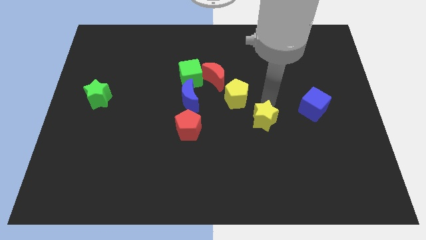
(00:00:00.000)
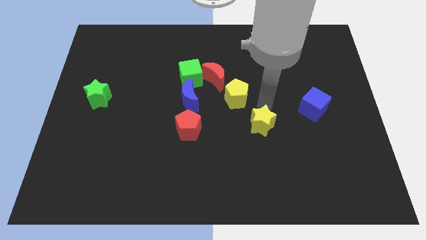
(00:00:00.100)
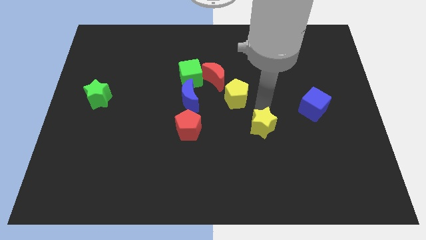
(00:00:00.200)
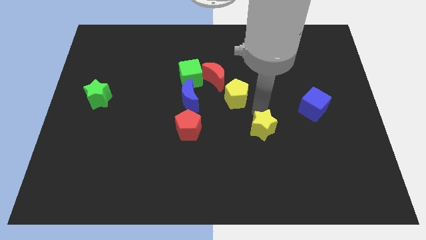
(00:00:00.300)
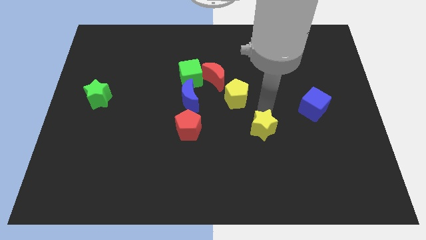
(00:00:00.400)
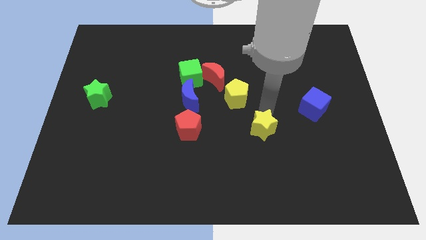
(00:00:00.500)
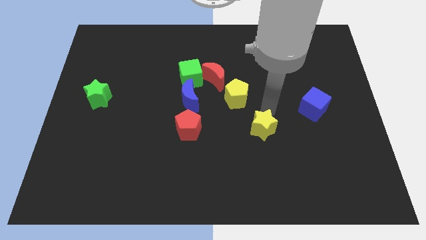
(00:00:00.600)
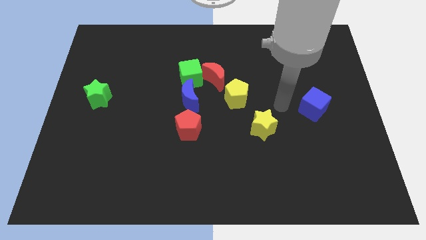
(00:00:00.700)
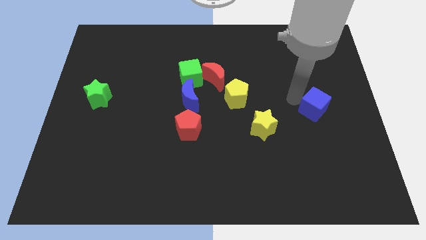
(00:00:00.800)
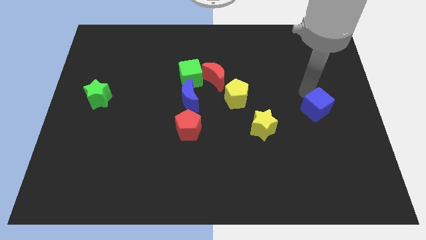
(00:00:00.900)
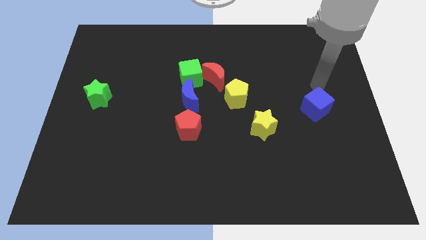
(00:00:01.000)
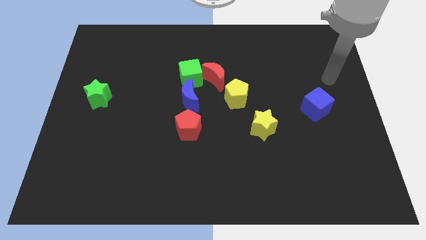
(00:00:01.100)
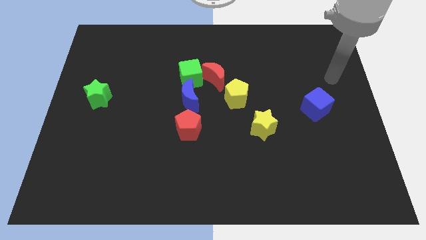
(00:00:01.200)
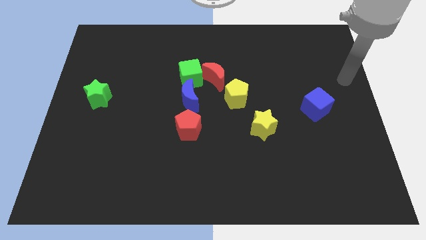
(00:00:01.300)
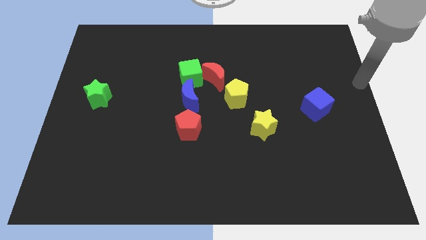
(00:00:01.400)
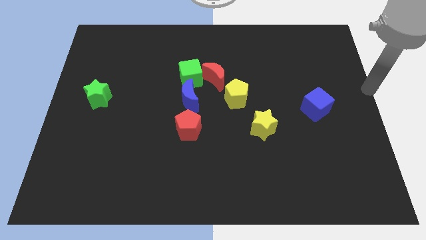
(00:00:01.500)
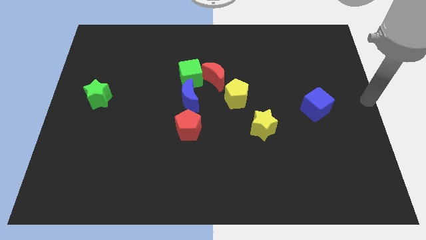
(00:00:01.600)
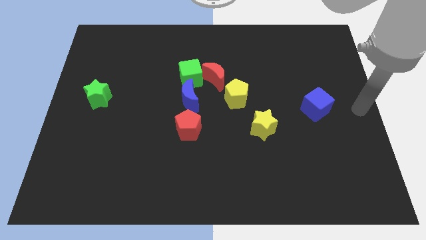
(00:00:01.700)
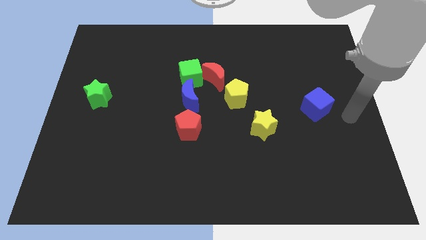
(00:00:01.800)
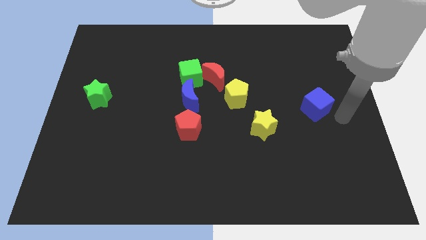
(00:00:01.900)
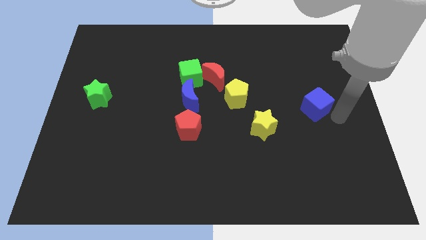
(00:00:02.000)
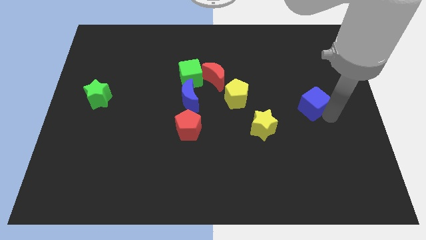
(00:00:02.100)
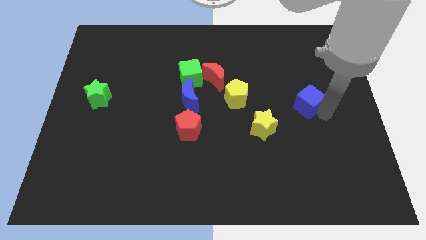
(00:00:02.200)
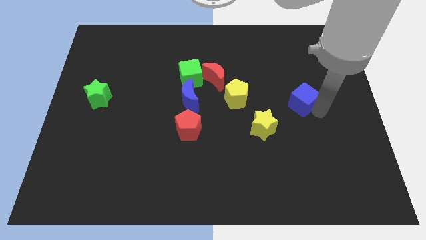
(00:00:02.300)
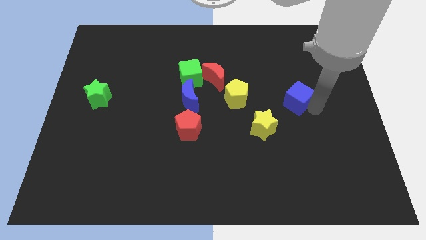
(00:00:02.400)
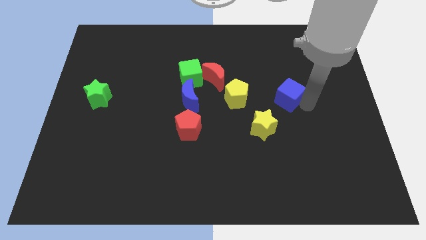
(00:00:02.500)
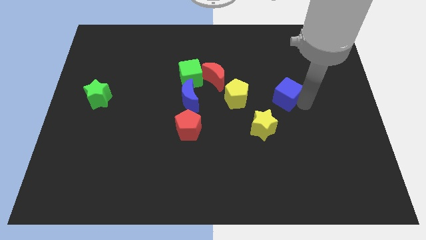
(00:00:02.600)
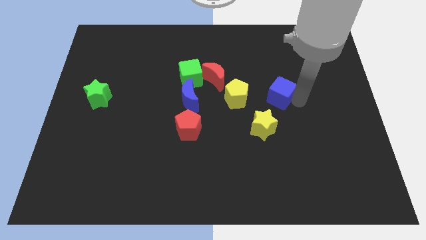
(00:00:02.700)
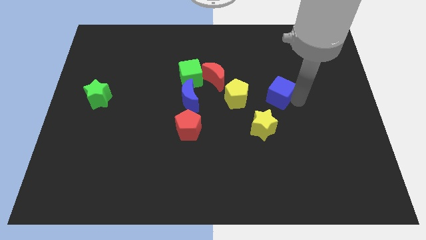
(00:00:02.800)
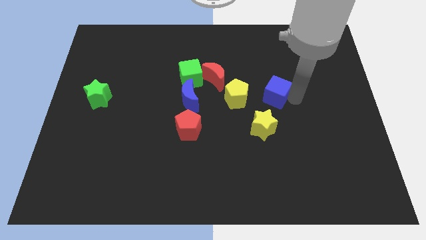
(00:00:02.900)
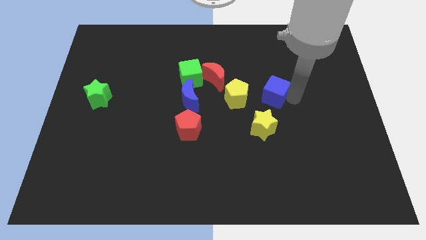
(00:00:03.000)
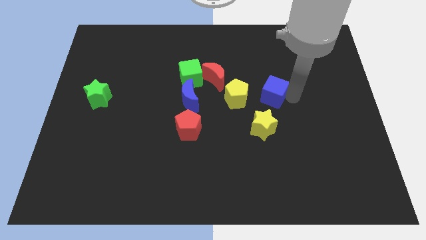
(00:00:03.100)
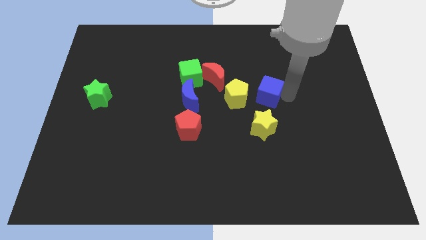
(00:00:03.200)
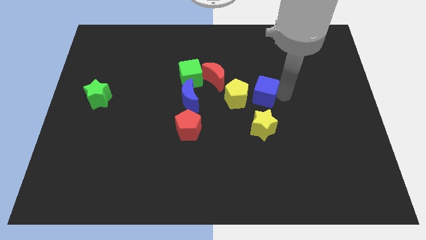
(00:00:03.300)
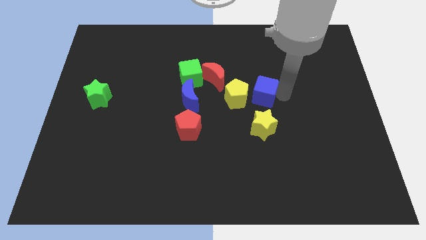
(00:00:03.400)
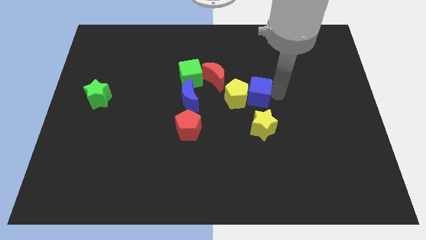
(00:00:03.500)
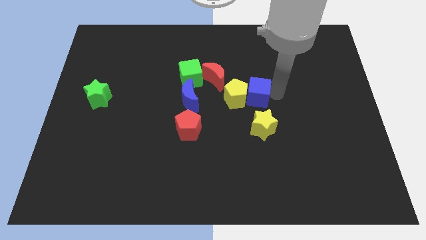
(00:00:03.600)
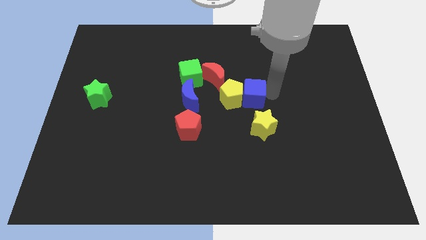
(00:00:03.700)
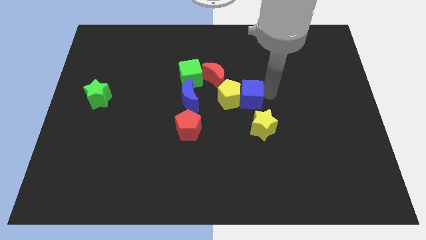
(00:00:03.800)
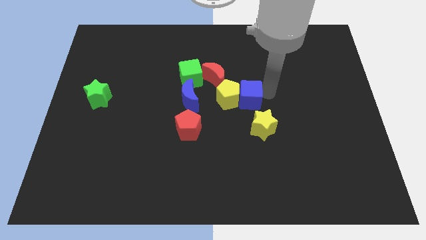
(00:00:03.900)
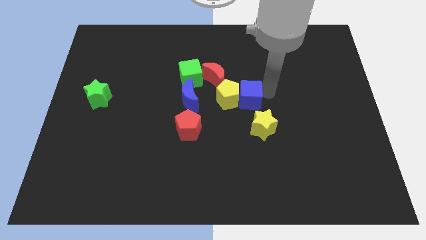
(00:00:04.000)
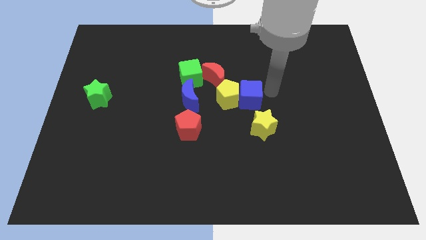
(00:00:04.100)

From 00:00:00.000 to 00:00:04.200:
push blue cube into the yellow pentagon

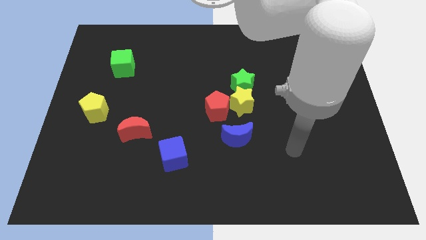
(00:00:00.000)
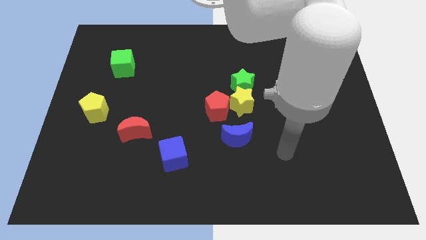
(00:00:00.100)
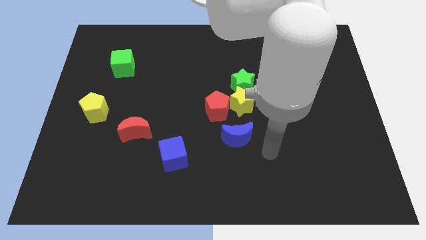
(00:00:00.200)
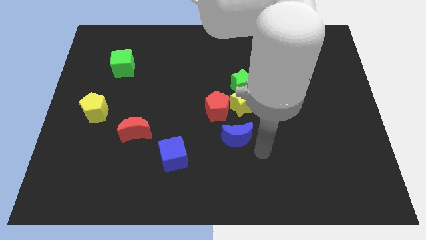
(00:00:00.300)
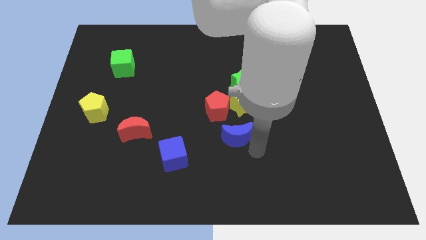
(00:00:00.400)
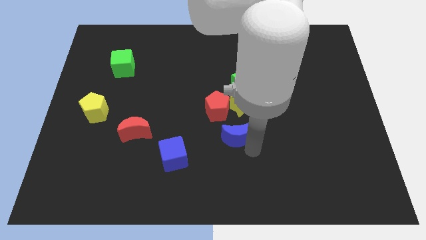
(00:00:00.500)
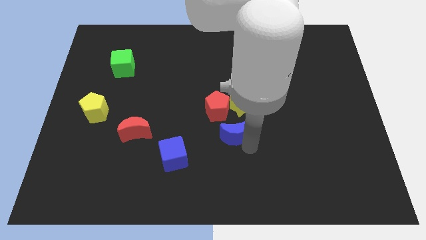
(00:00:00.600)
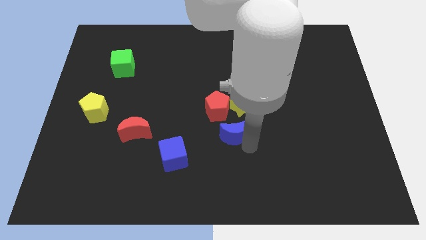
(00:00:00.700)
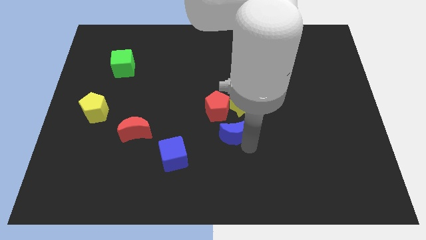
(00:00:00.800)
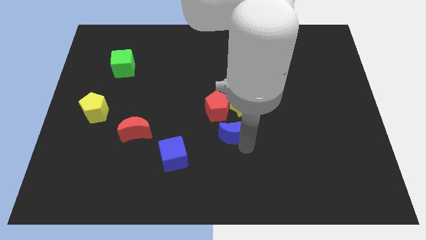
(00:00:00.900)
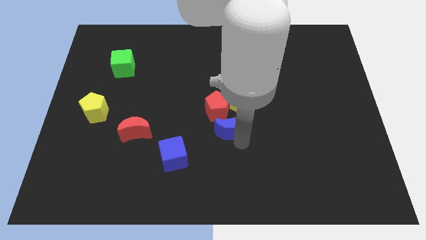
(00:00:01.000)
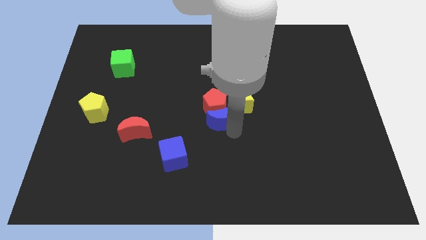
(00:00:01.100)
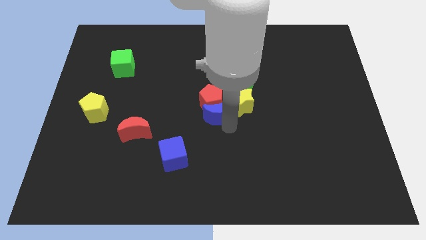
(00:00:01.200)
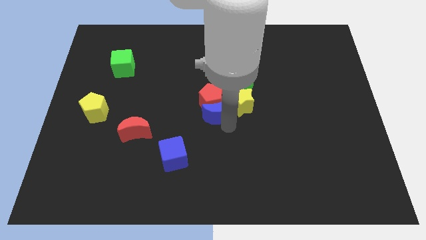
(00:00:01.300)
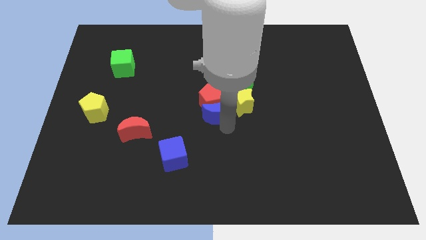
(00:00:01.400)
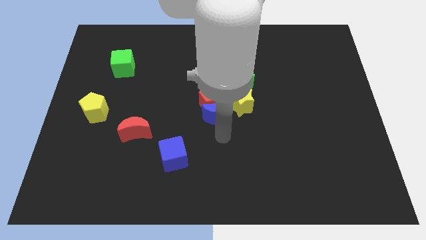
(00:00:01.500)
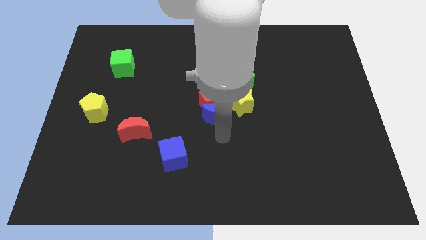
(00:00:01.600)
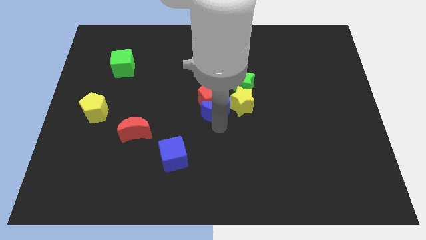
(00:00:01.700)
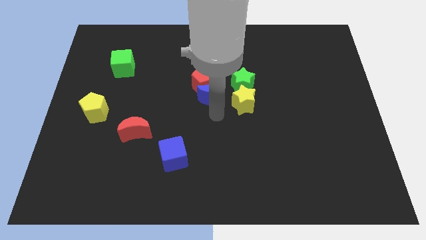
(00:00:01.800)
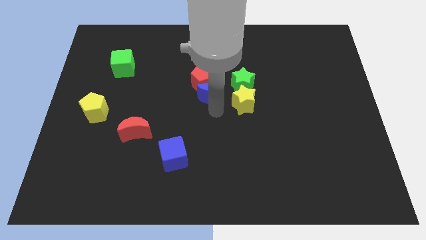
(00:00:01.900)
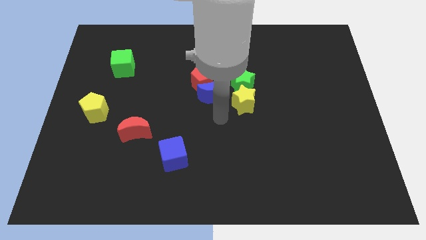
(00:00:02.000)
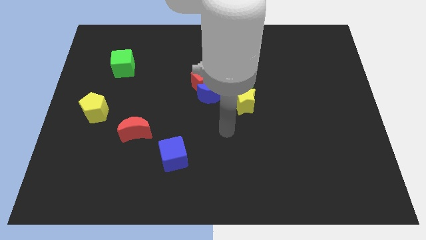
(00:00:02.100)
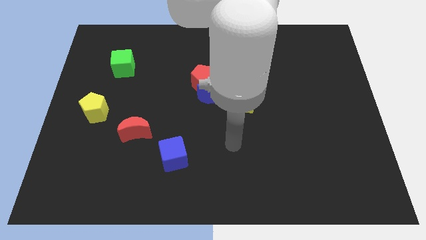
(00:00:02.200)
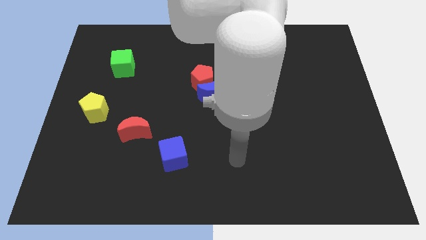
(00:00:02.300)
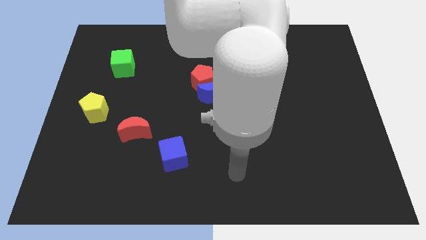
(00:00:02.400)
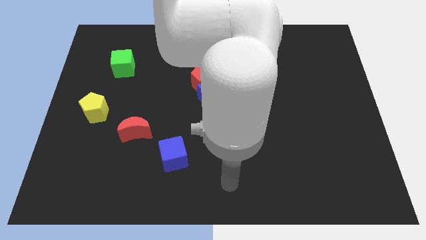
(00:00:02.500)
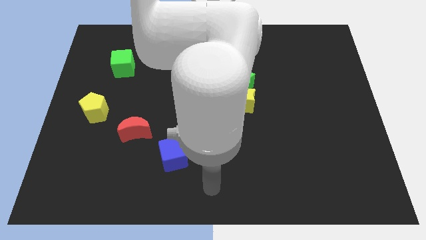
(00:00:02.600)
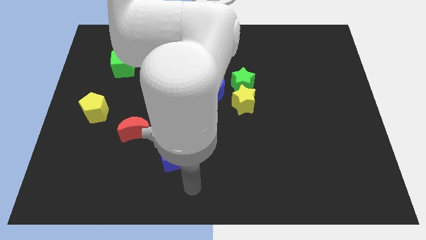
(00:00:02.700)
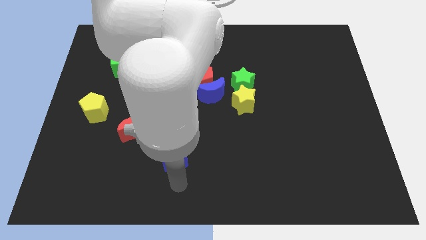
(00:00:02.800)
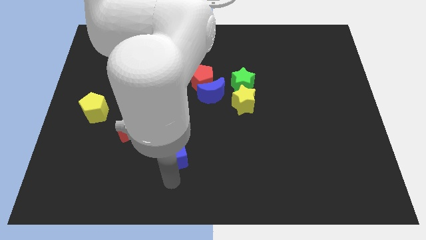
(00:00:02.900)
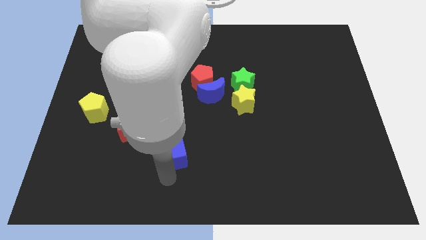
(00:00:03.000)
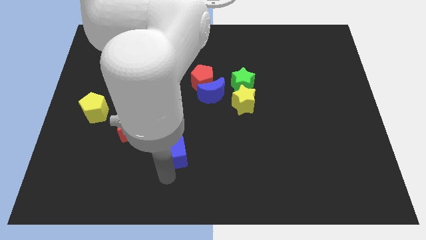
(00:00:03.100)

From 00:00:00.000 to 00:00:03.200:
place the blue moon in the center of the board

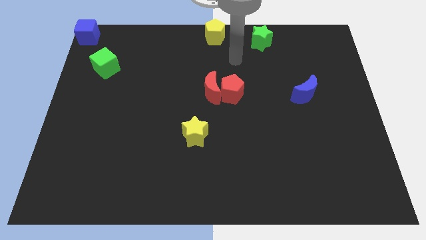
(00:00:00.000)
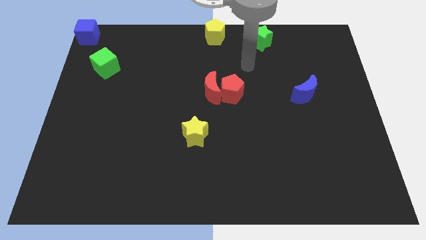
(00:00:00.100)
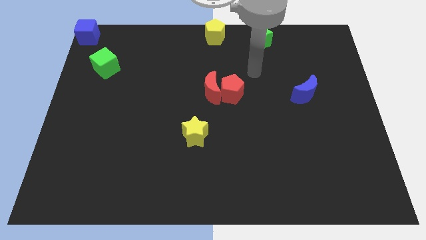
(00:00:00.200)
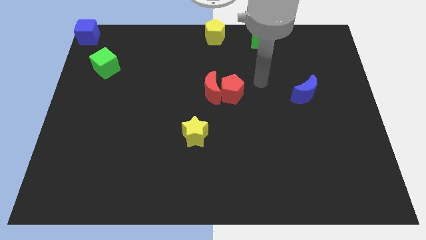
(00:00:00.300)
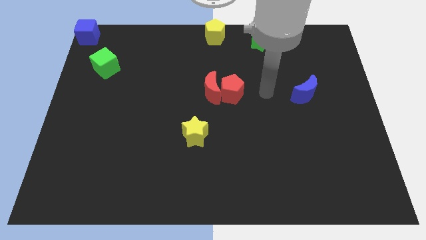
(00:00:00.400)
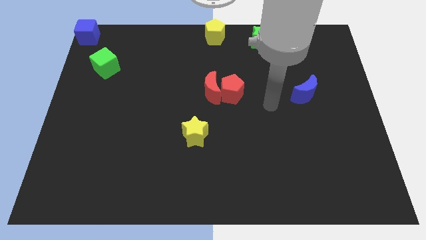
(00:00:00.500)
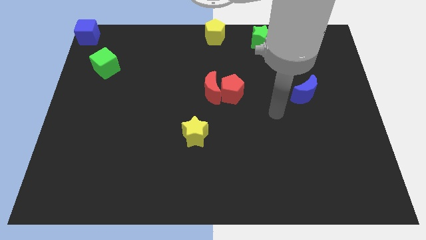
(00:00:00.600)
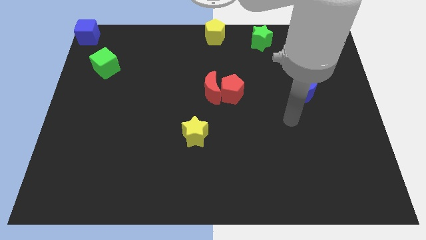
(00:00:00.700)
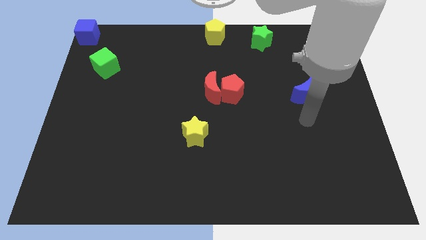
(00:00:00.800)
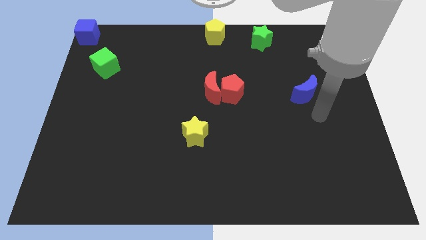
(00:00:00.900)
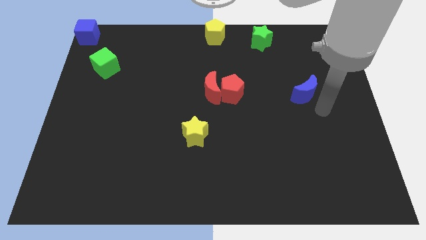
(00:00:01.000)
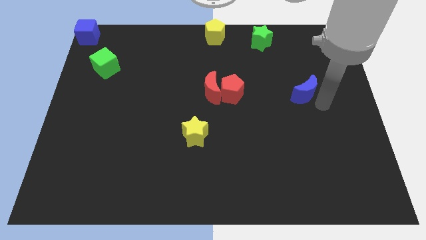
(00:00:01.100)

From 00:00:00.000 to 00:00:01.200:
move your arm to the bottom right of the blue crescent

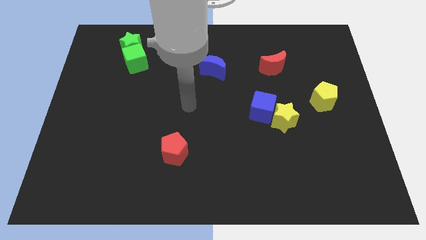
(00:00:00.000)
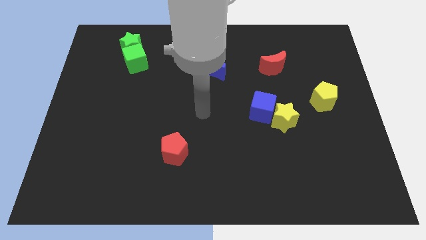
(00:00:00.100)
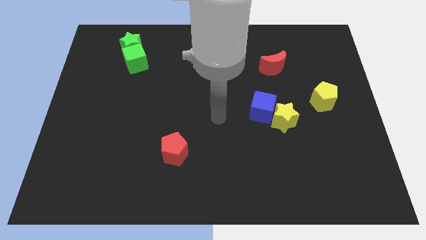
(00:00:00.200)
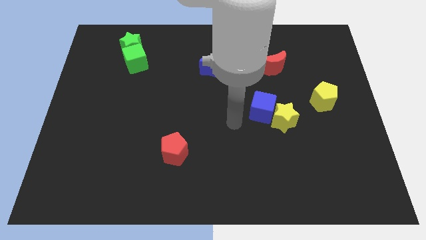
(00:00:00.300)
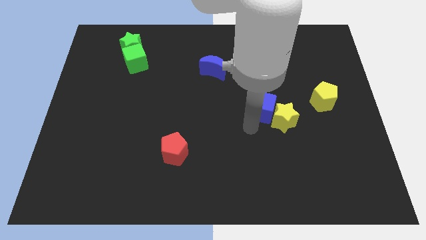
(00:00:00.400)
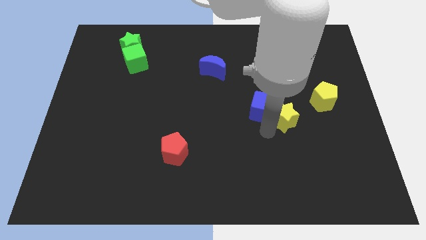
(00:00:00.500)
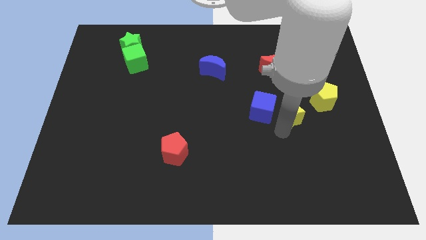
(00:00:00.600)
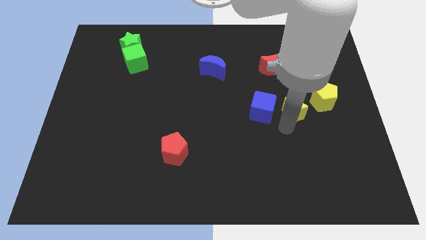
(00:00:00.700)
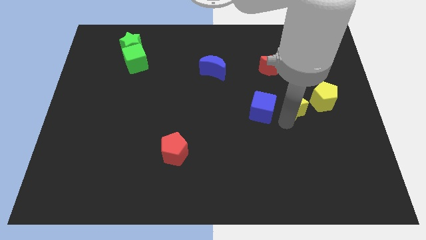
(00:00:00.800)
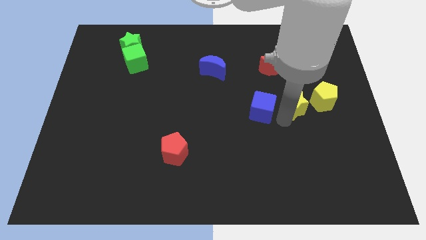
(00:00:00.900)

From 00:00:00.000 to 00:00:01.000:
separate the yellow star from the blue cube
